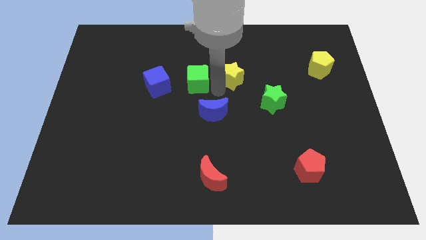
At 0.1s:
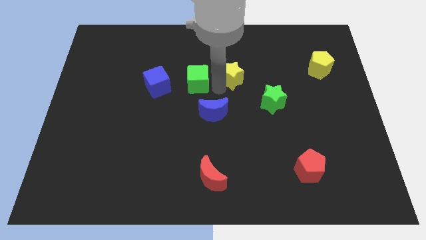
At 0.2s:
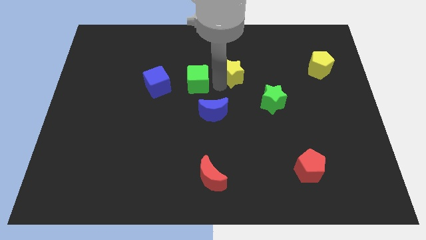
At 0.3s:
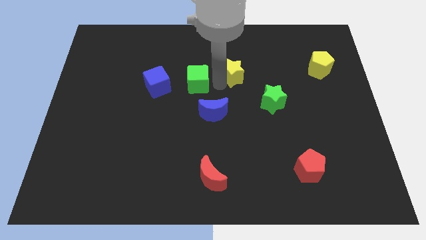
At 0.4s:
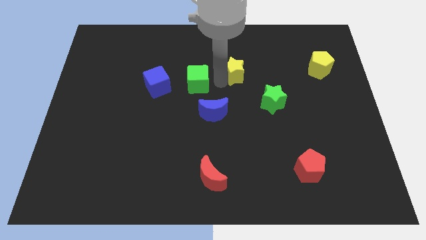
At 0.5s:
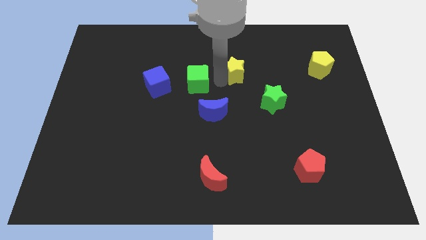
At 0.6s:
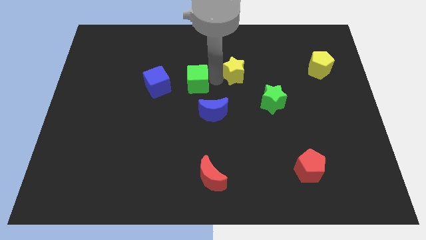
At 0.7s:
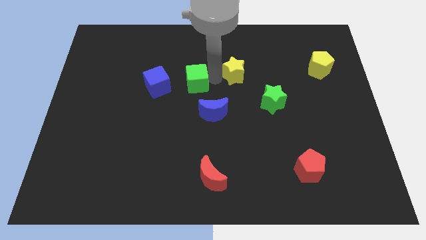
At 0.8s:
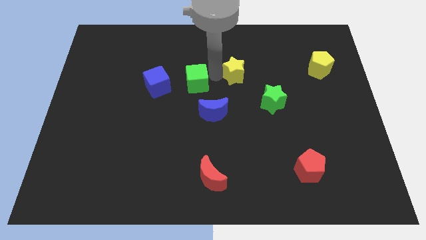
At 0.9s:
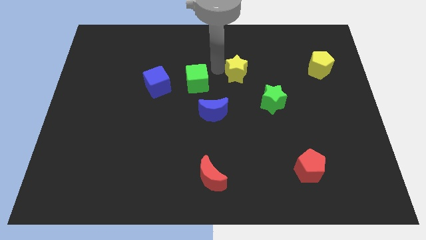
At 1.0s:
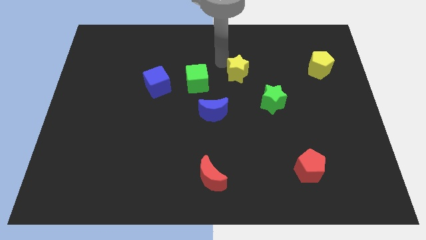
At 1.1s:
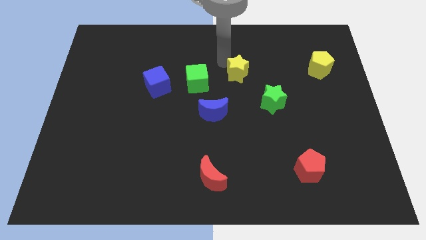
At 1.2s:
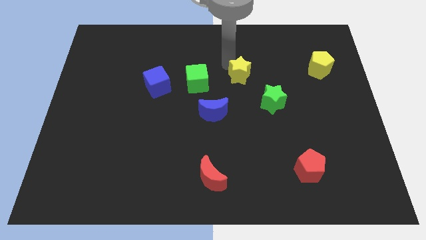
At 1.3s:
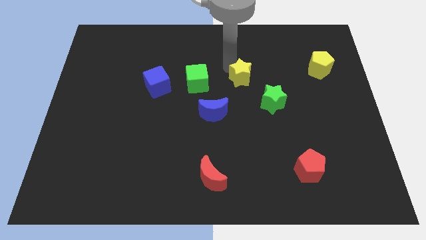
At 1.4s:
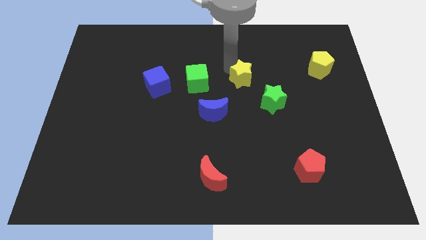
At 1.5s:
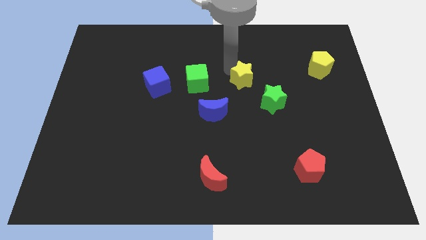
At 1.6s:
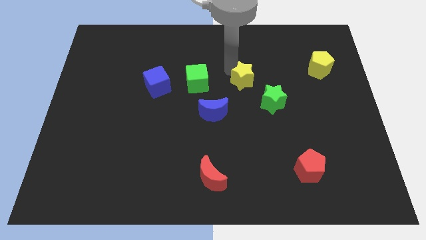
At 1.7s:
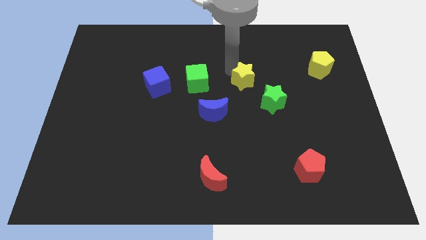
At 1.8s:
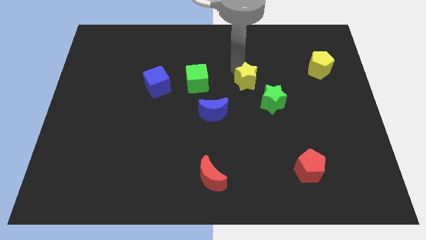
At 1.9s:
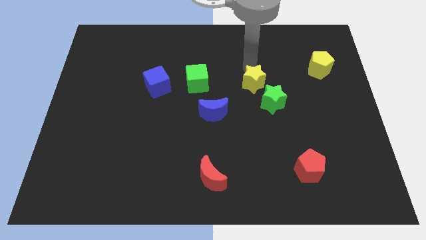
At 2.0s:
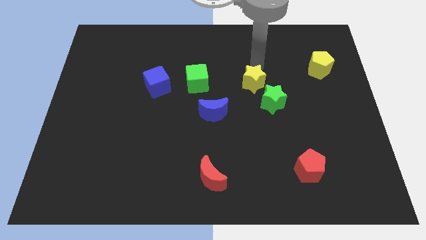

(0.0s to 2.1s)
place the yellow star diagonally to the green star

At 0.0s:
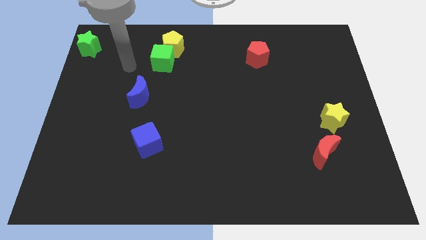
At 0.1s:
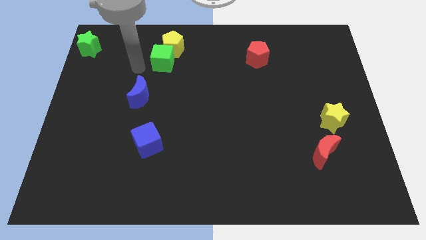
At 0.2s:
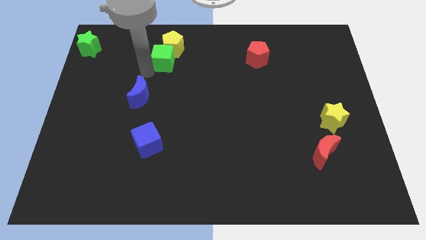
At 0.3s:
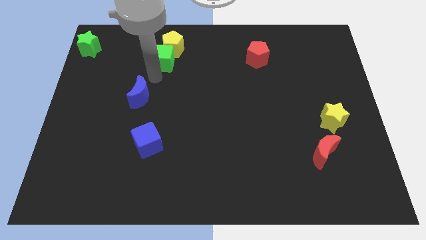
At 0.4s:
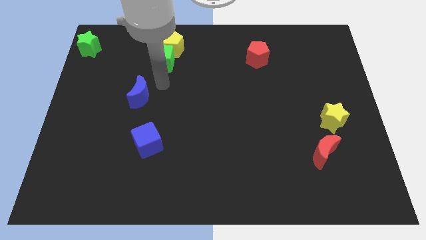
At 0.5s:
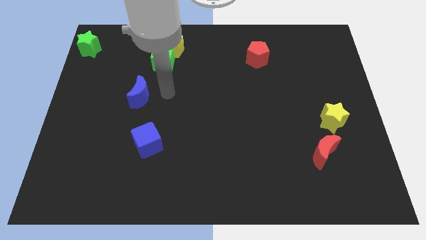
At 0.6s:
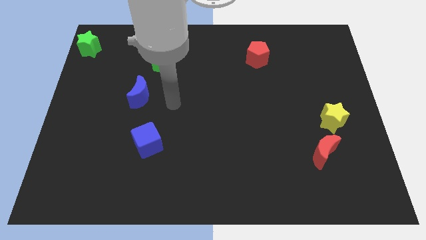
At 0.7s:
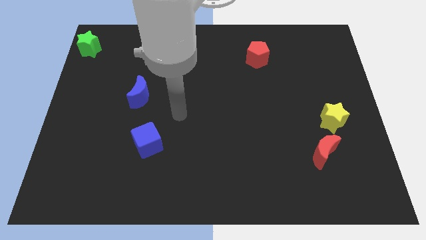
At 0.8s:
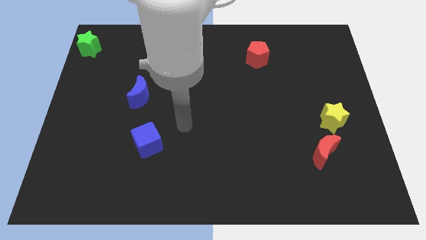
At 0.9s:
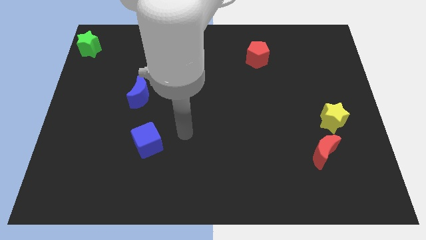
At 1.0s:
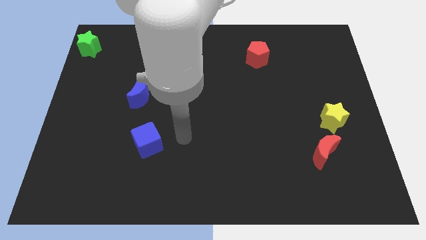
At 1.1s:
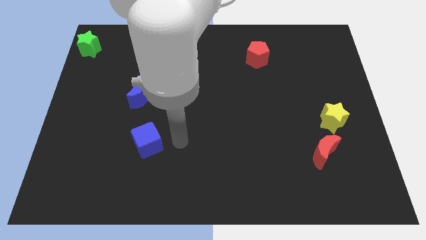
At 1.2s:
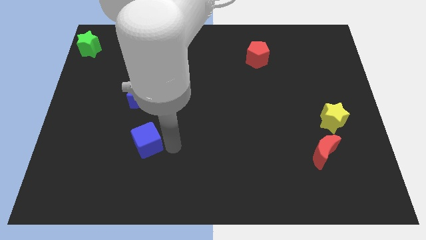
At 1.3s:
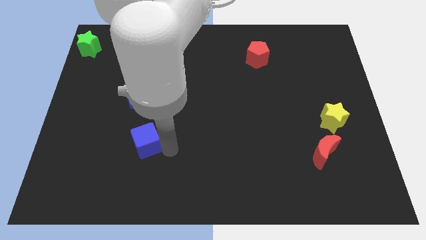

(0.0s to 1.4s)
place your arm to the right of blue cube

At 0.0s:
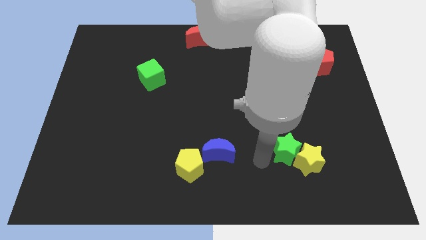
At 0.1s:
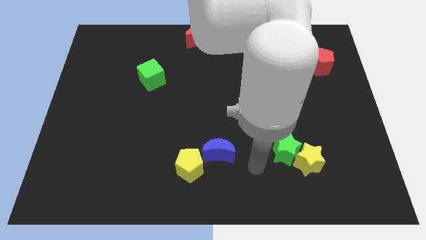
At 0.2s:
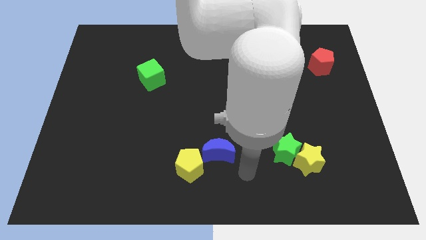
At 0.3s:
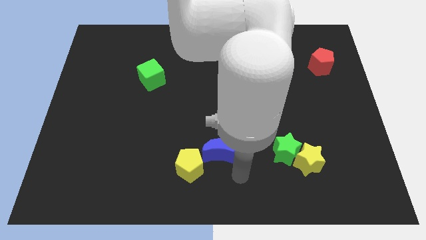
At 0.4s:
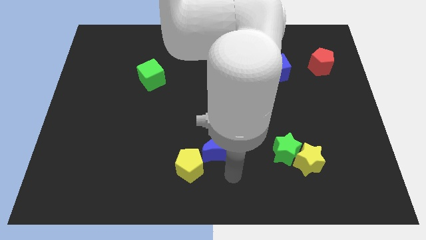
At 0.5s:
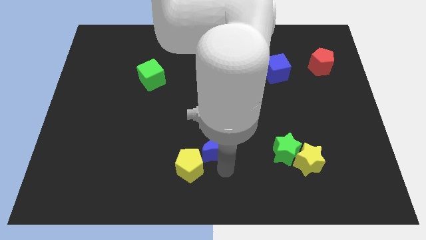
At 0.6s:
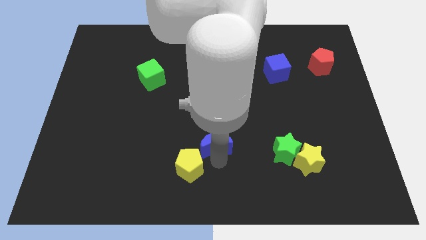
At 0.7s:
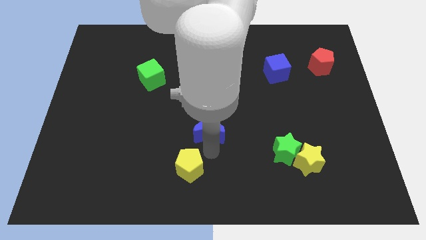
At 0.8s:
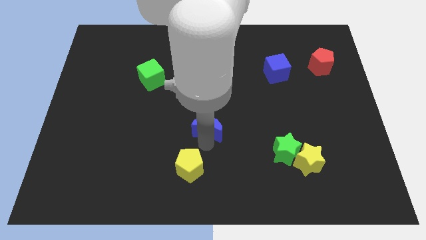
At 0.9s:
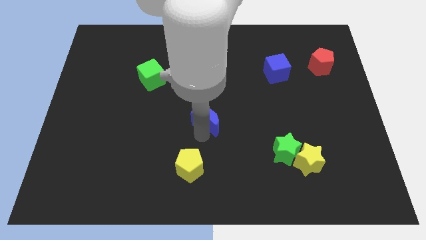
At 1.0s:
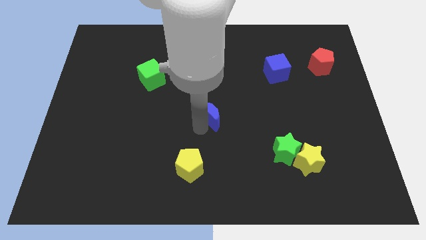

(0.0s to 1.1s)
move the blue crescent diagonally top left to the green star

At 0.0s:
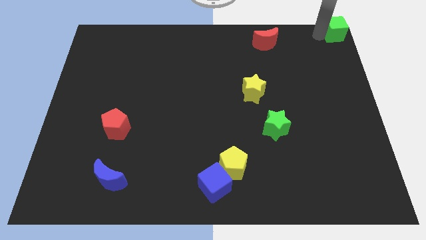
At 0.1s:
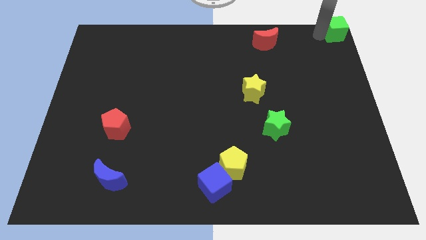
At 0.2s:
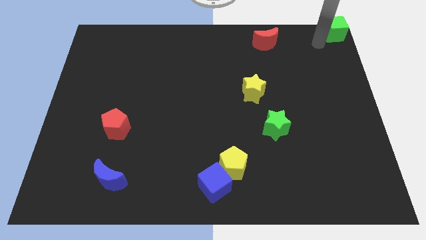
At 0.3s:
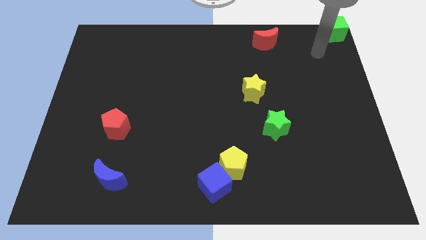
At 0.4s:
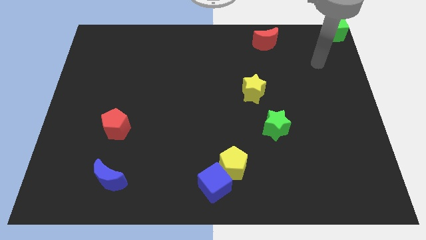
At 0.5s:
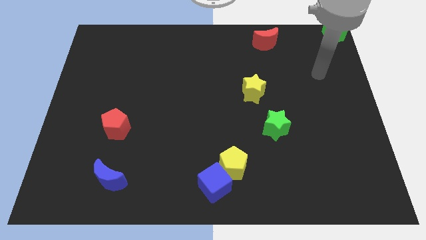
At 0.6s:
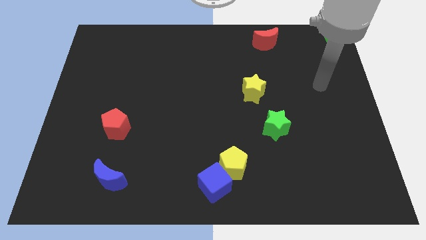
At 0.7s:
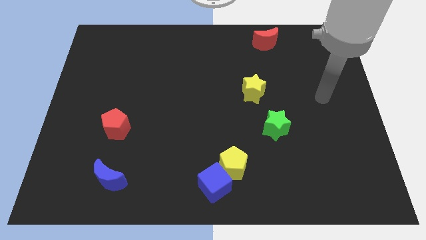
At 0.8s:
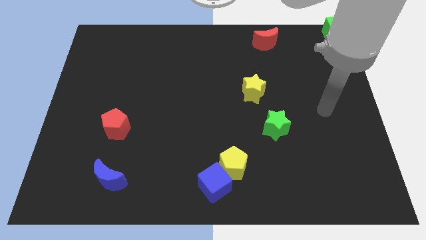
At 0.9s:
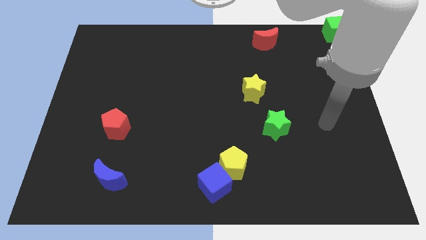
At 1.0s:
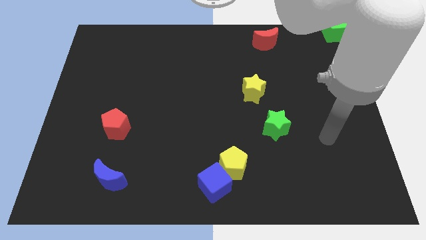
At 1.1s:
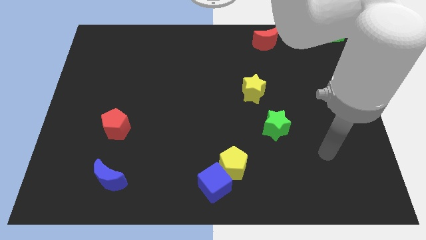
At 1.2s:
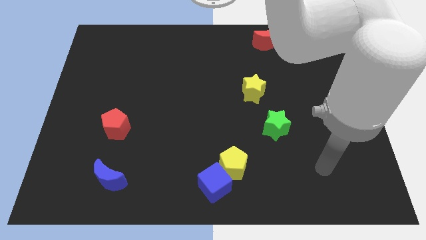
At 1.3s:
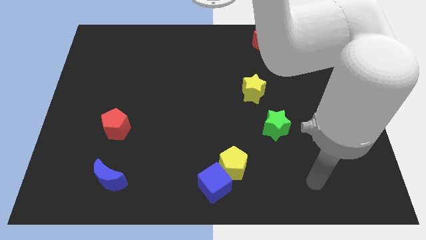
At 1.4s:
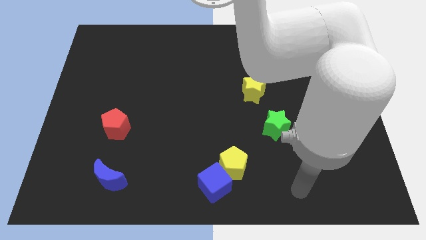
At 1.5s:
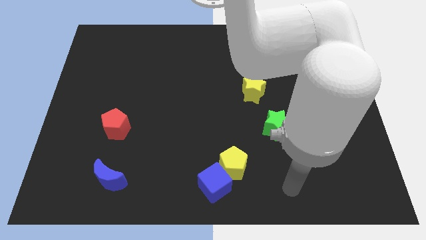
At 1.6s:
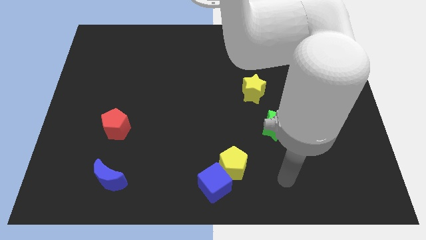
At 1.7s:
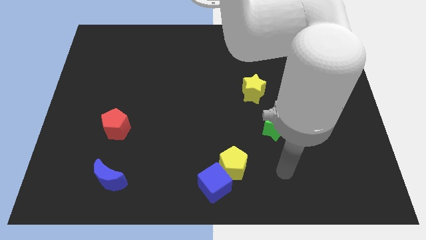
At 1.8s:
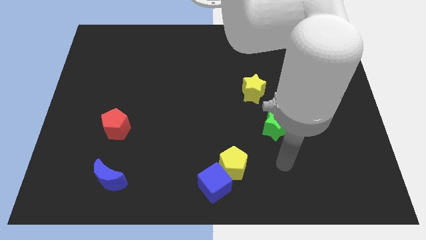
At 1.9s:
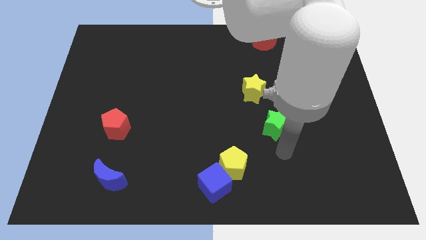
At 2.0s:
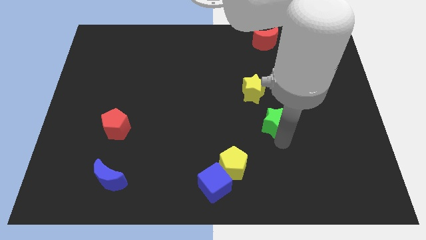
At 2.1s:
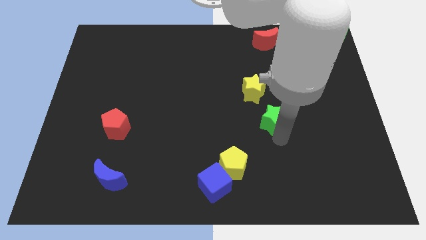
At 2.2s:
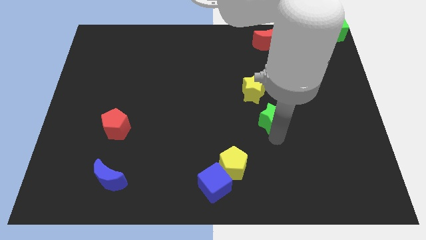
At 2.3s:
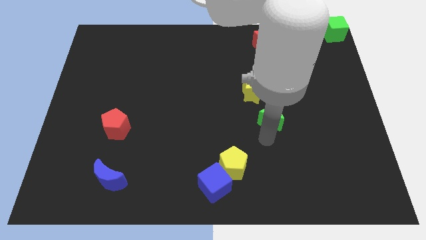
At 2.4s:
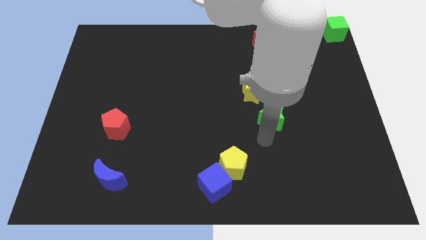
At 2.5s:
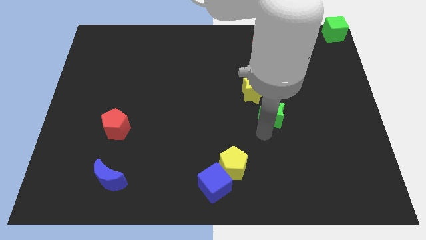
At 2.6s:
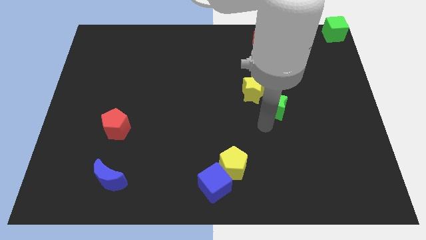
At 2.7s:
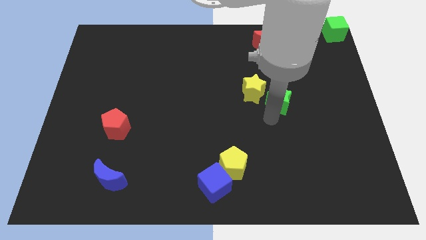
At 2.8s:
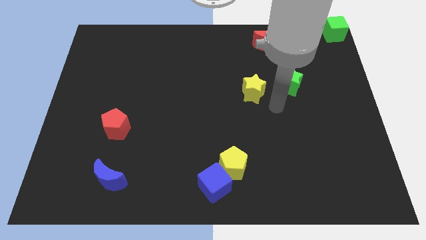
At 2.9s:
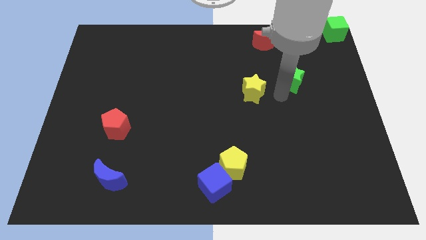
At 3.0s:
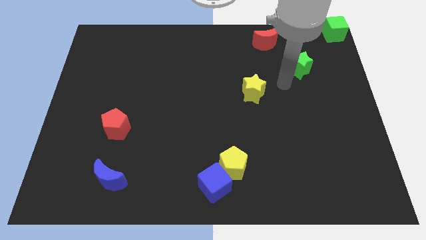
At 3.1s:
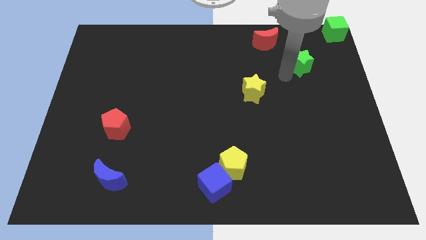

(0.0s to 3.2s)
move the green star towards the top right side of the board

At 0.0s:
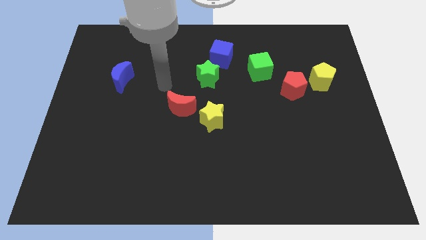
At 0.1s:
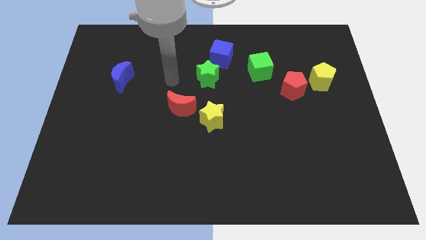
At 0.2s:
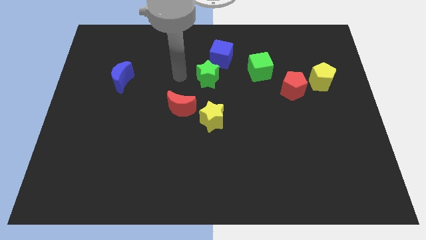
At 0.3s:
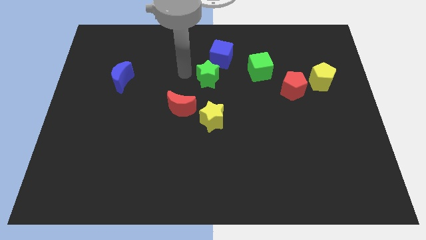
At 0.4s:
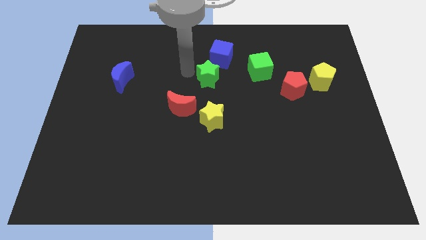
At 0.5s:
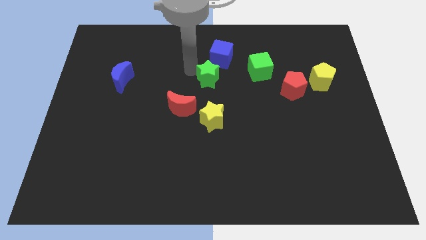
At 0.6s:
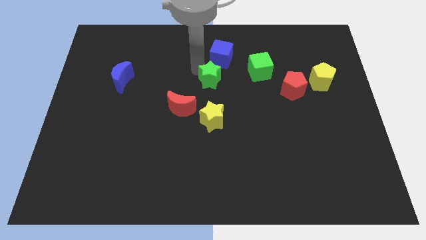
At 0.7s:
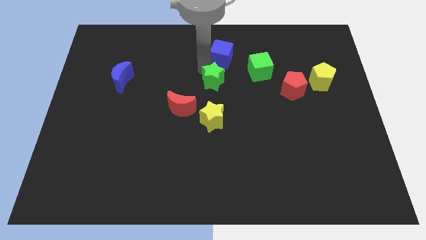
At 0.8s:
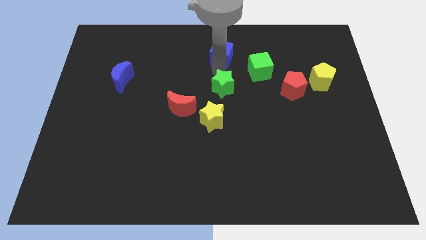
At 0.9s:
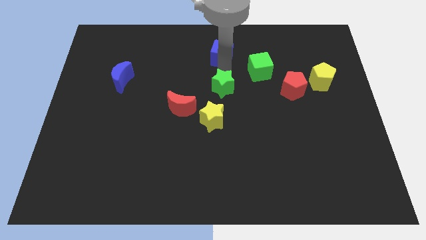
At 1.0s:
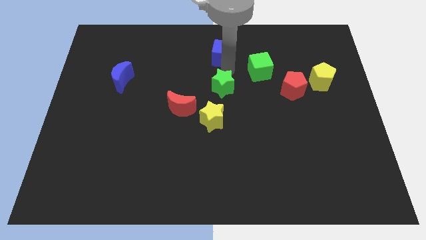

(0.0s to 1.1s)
move green star to the bottom of the blue cube

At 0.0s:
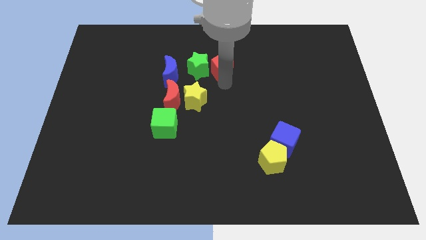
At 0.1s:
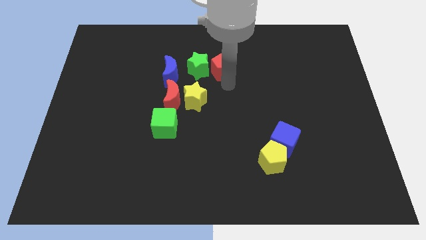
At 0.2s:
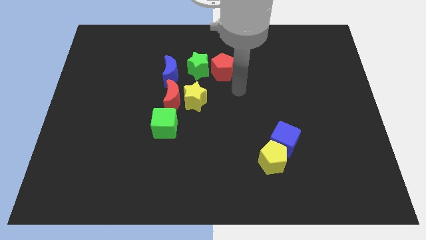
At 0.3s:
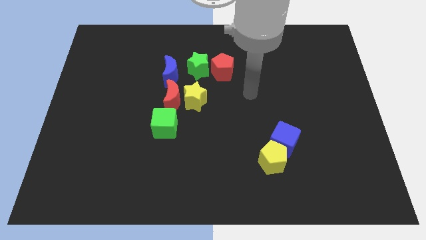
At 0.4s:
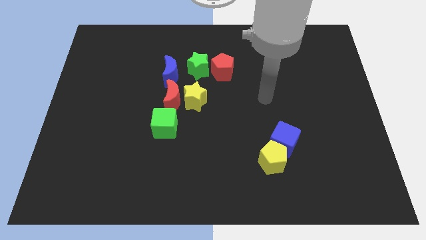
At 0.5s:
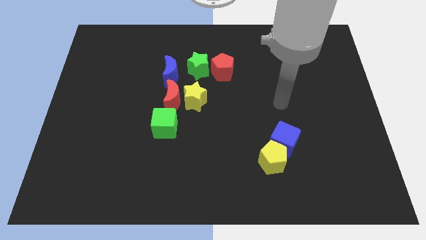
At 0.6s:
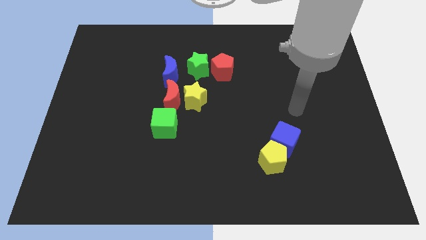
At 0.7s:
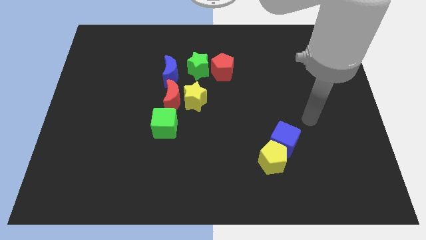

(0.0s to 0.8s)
move the arm away from the red pentagon
